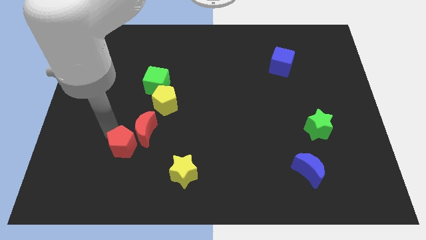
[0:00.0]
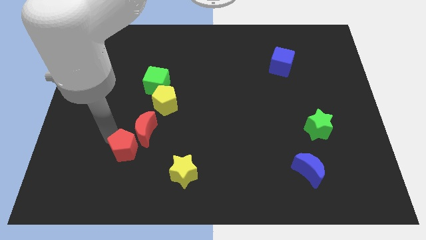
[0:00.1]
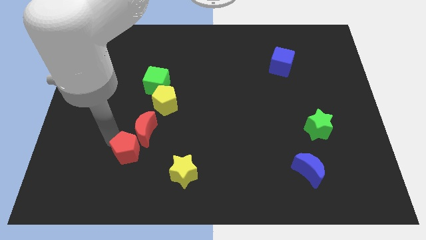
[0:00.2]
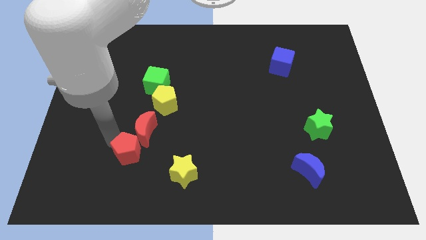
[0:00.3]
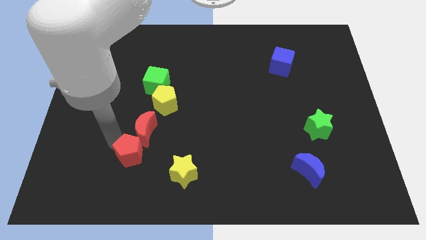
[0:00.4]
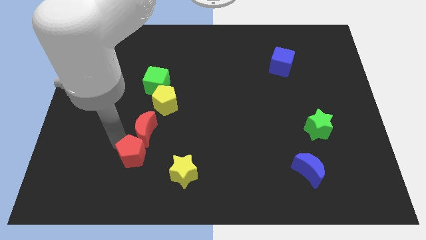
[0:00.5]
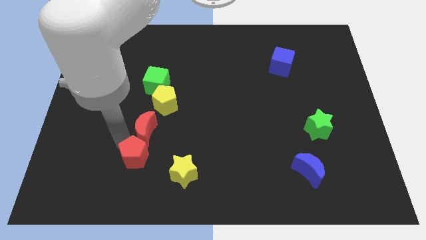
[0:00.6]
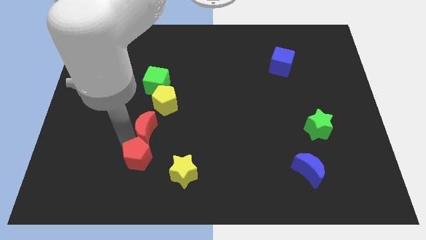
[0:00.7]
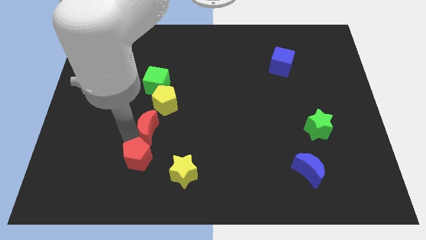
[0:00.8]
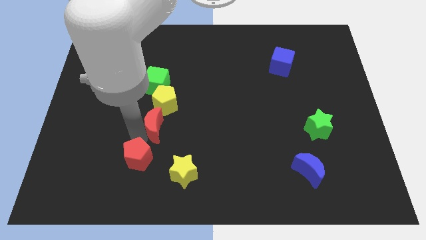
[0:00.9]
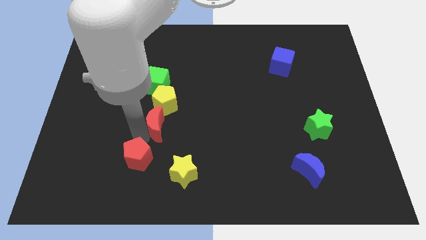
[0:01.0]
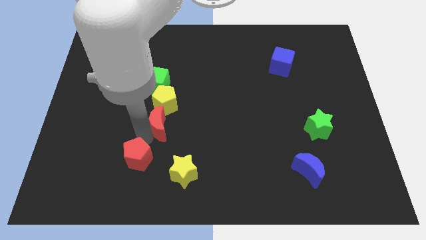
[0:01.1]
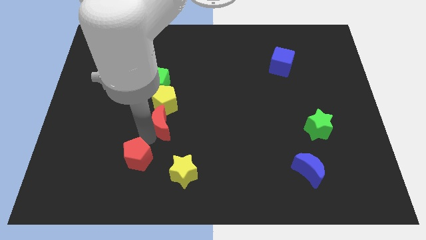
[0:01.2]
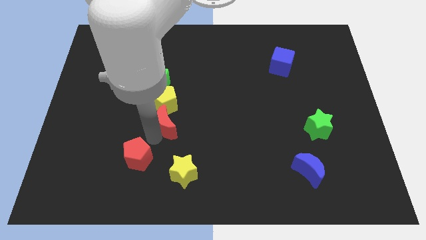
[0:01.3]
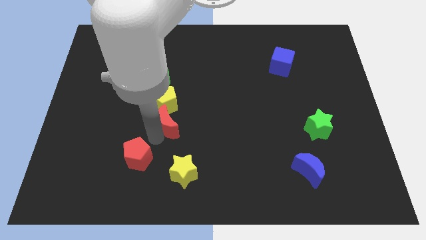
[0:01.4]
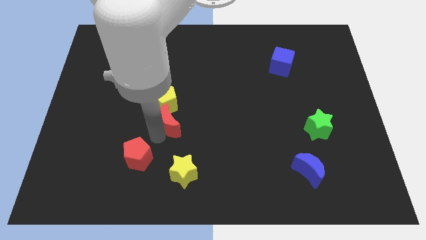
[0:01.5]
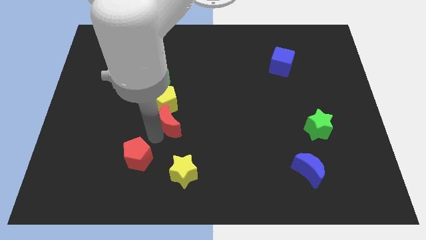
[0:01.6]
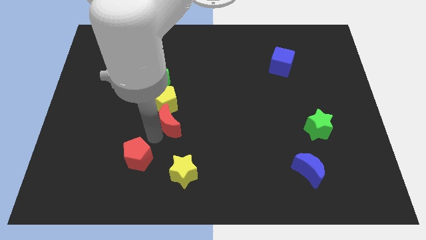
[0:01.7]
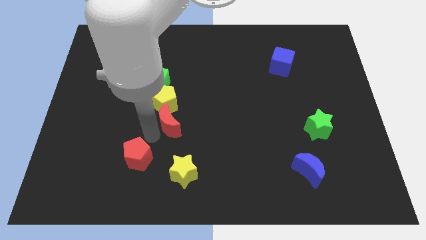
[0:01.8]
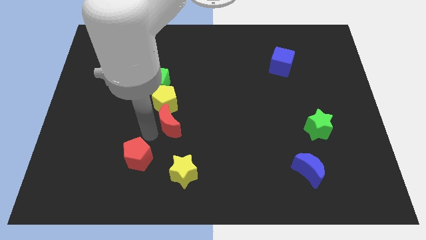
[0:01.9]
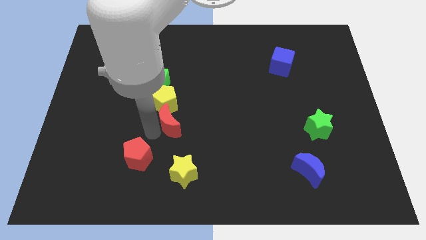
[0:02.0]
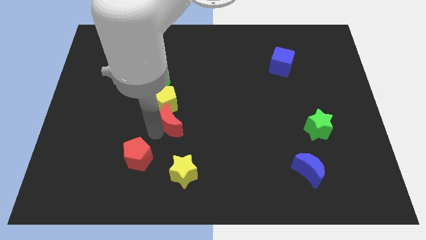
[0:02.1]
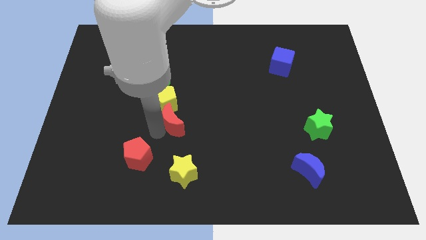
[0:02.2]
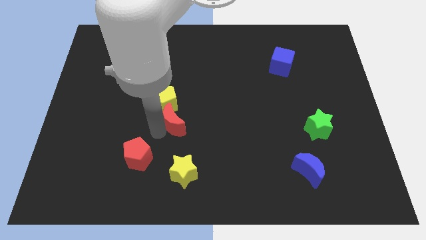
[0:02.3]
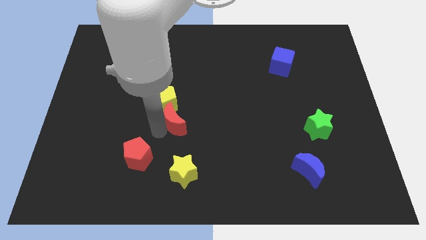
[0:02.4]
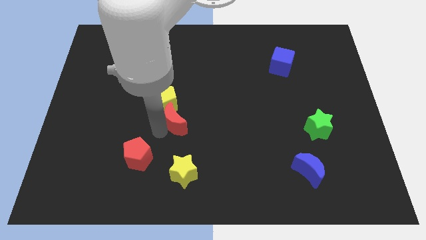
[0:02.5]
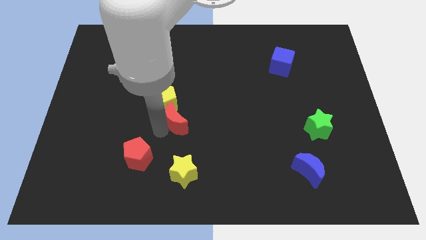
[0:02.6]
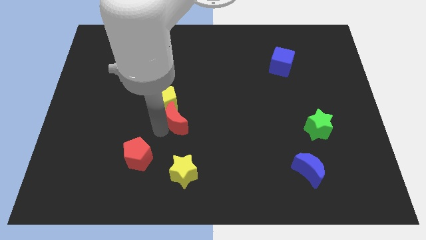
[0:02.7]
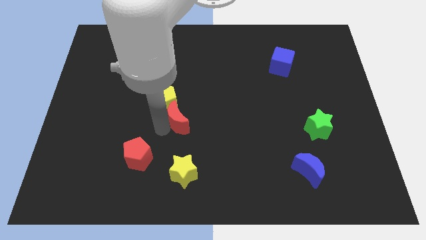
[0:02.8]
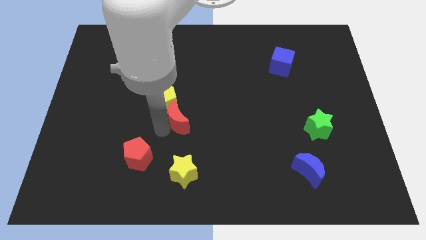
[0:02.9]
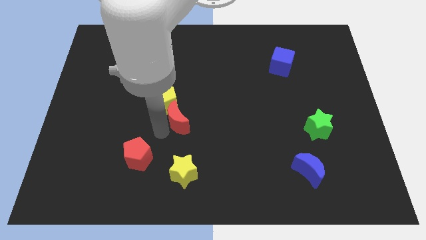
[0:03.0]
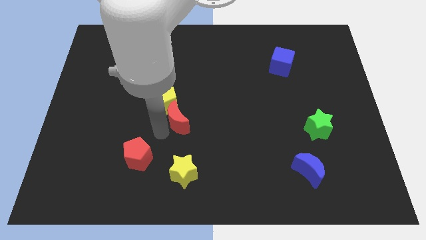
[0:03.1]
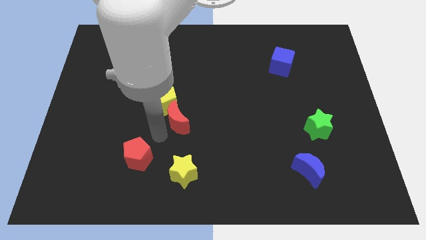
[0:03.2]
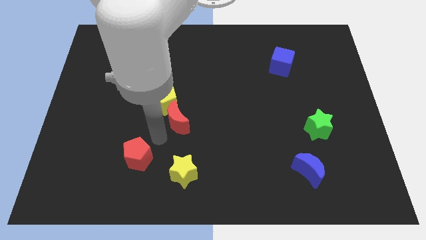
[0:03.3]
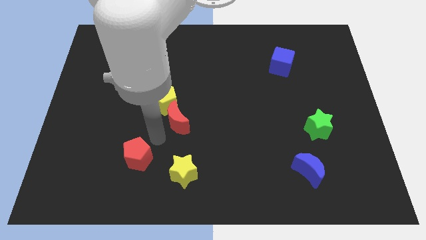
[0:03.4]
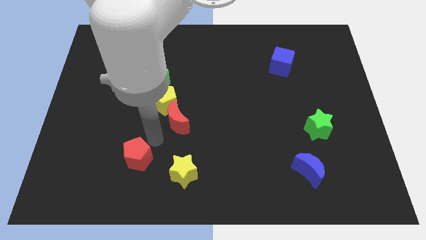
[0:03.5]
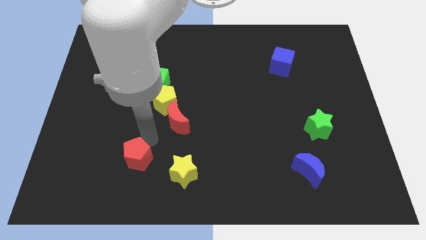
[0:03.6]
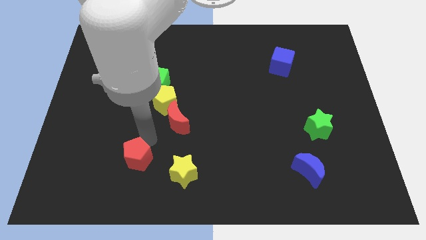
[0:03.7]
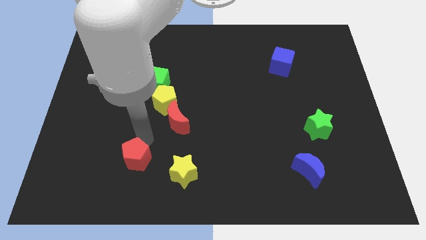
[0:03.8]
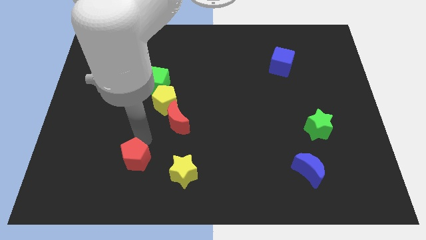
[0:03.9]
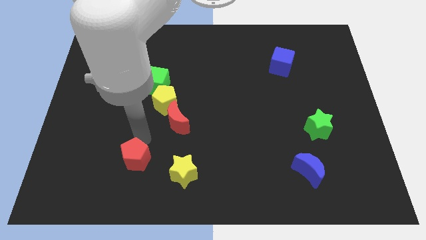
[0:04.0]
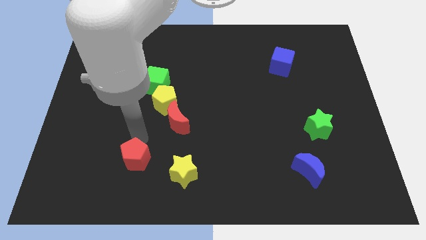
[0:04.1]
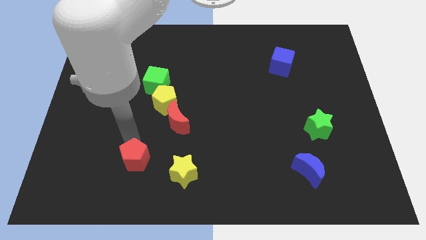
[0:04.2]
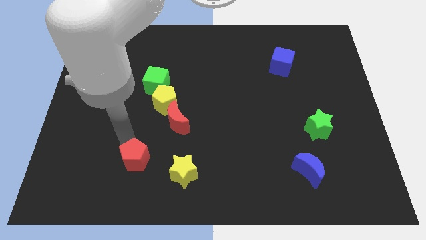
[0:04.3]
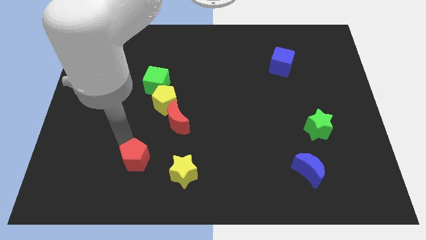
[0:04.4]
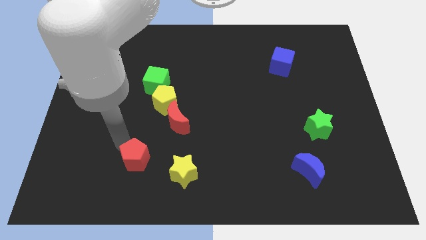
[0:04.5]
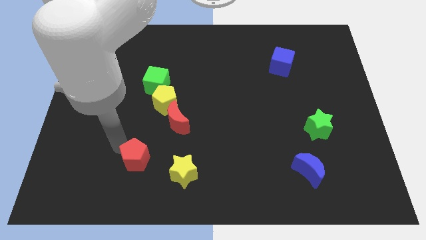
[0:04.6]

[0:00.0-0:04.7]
push the red crescent to the bottom of the yellow pentagon

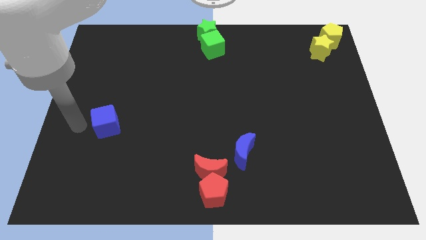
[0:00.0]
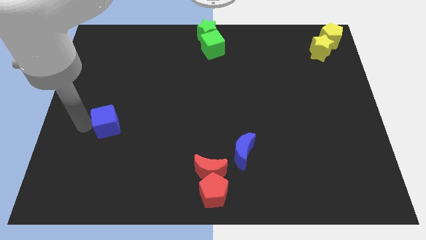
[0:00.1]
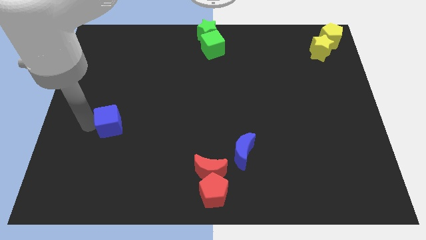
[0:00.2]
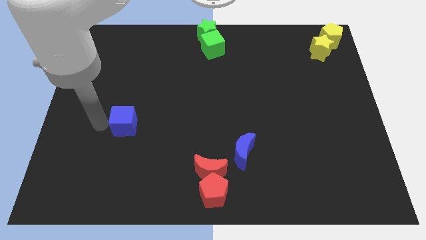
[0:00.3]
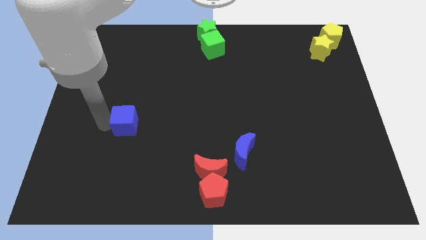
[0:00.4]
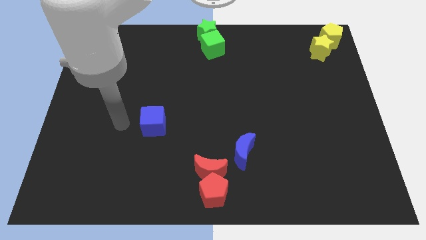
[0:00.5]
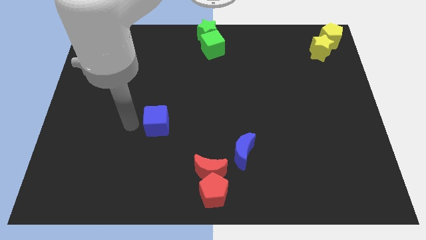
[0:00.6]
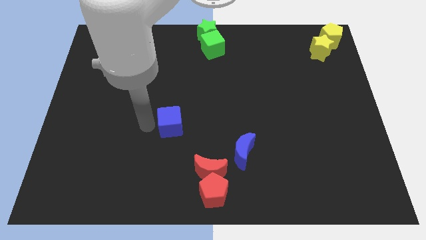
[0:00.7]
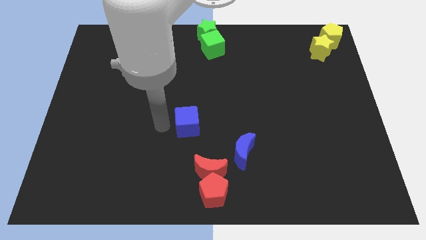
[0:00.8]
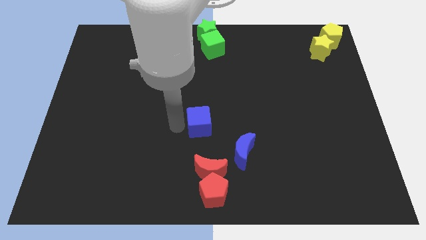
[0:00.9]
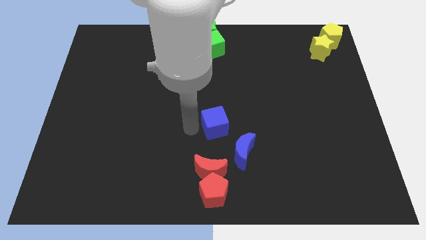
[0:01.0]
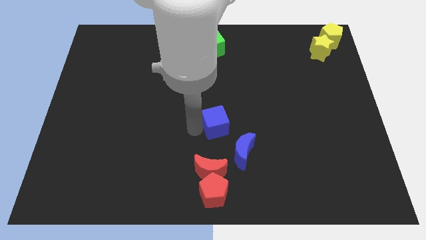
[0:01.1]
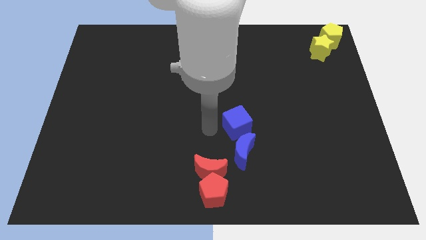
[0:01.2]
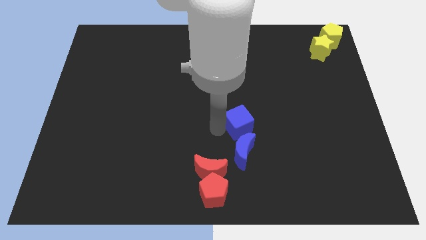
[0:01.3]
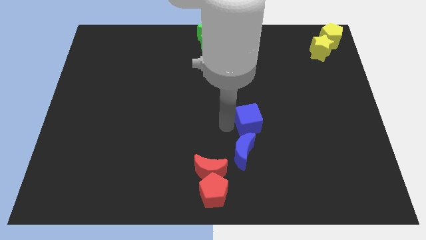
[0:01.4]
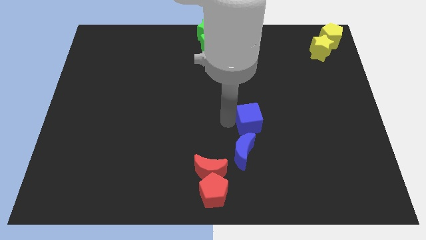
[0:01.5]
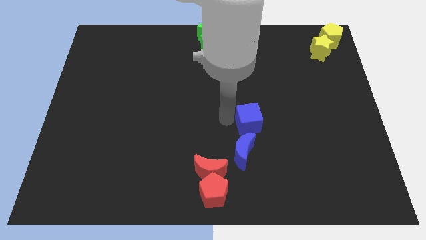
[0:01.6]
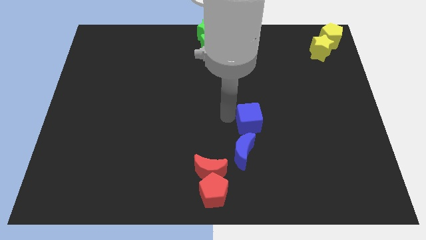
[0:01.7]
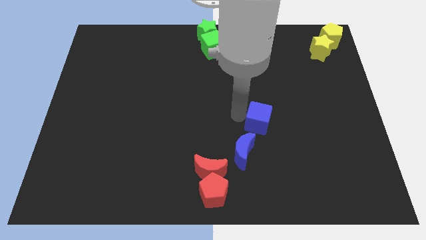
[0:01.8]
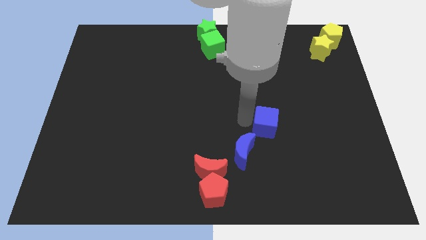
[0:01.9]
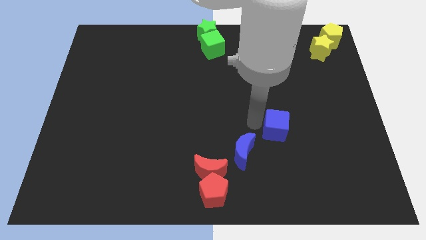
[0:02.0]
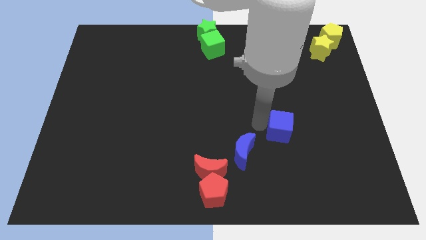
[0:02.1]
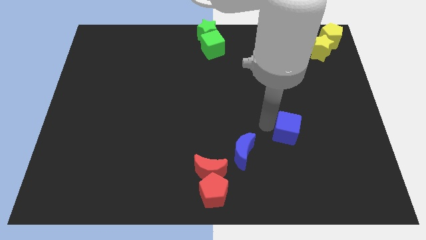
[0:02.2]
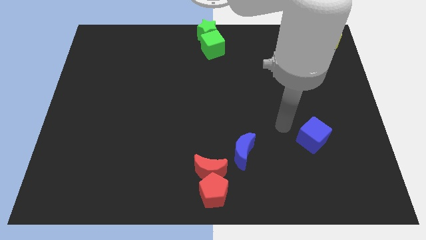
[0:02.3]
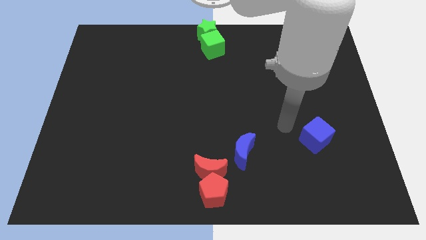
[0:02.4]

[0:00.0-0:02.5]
push the blue cube towards the bottom right corner of the board

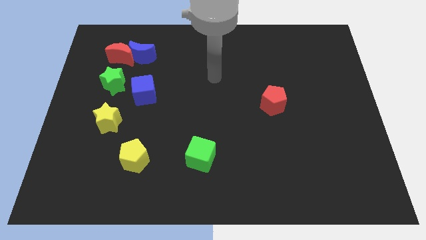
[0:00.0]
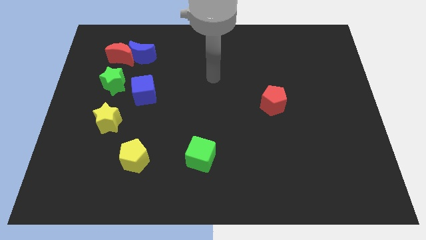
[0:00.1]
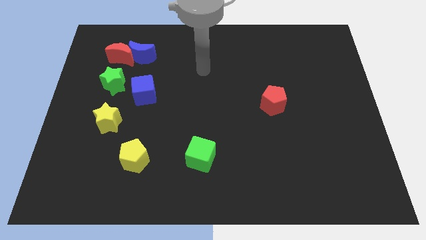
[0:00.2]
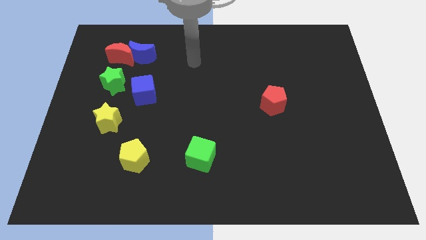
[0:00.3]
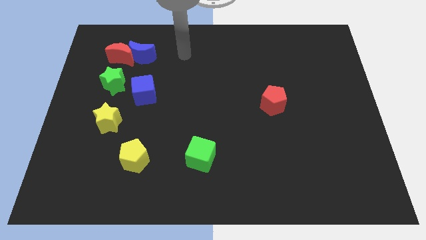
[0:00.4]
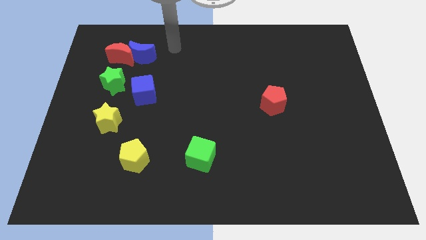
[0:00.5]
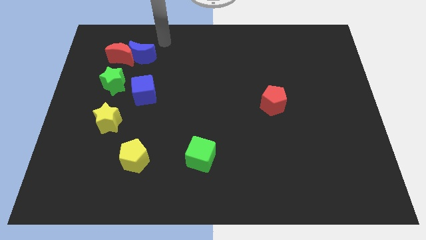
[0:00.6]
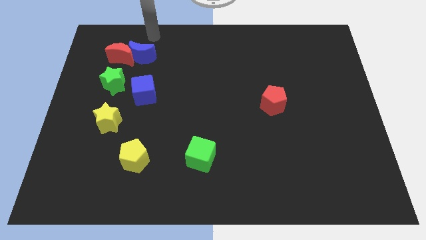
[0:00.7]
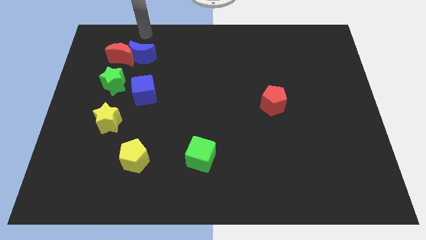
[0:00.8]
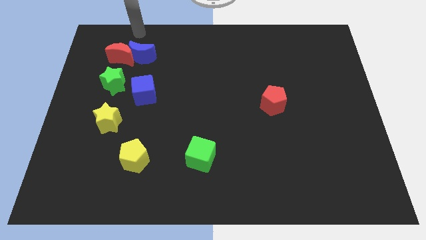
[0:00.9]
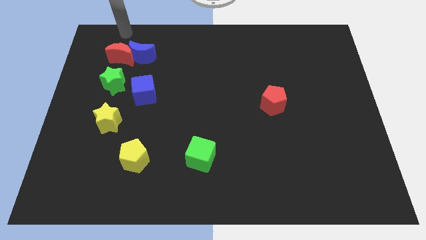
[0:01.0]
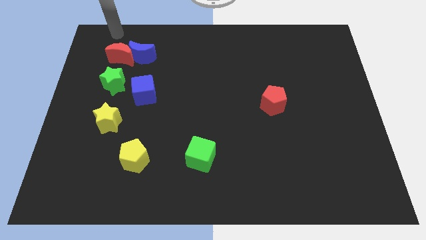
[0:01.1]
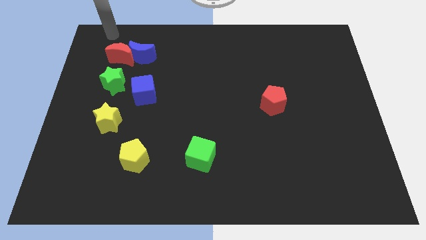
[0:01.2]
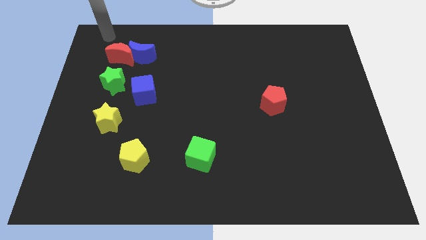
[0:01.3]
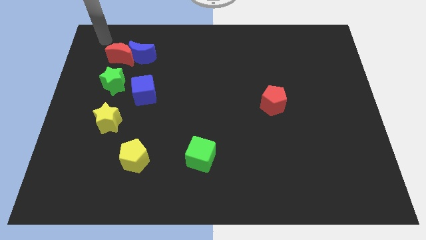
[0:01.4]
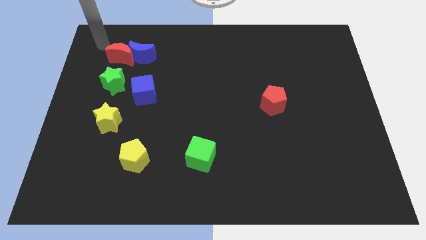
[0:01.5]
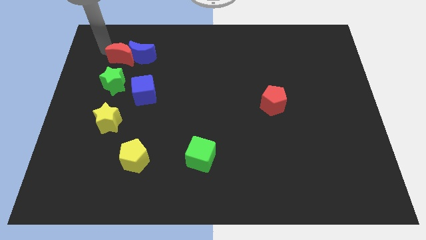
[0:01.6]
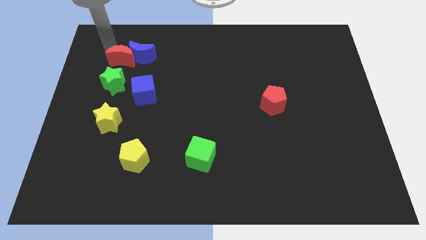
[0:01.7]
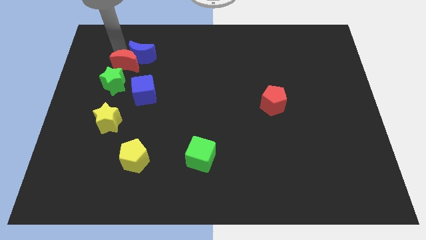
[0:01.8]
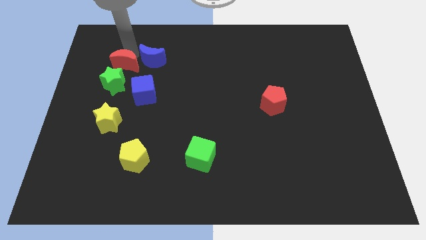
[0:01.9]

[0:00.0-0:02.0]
separate the red moon and blue moon
